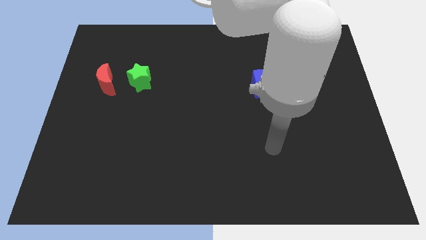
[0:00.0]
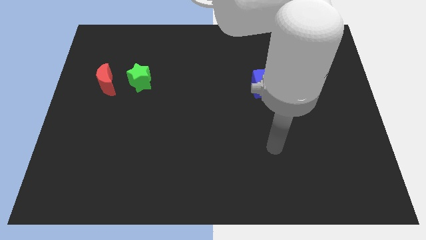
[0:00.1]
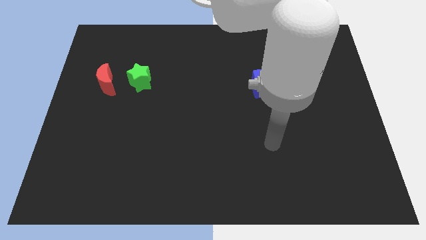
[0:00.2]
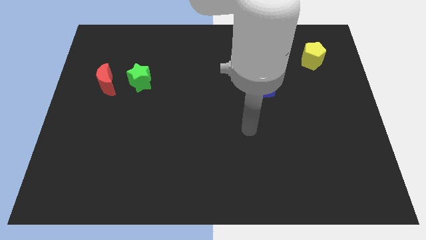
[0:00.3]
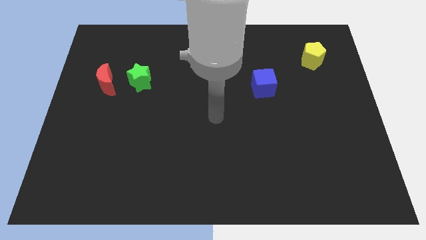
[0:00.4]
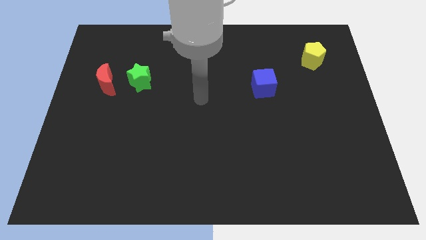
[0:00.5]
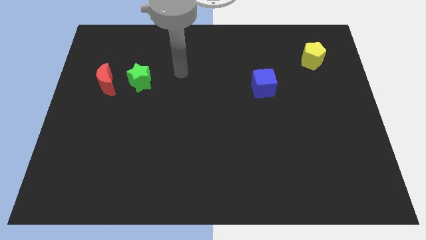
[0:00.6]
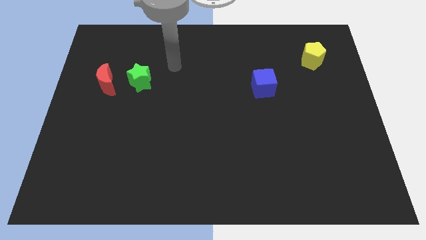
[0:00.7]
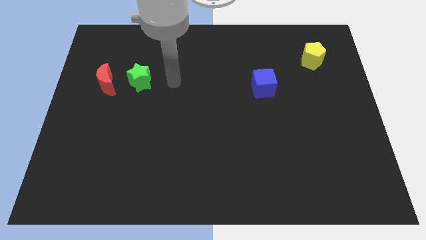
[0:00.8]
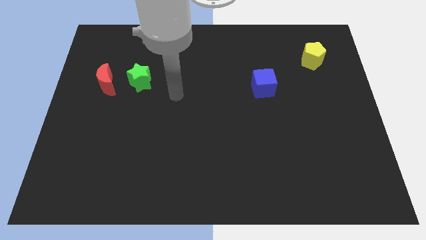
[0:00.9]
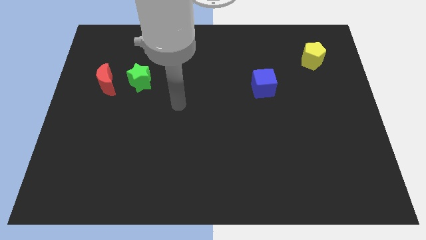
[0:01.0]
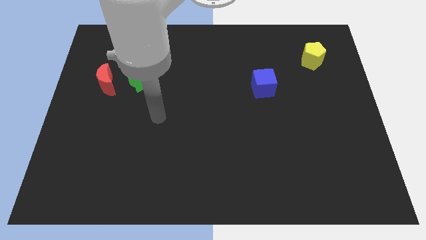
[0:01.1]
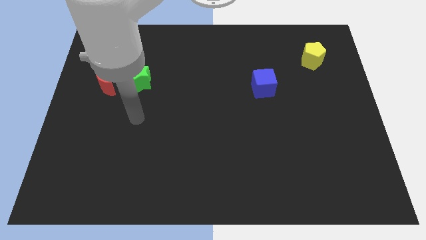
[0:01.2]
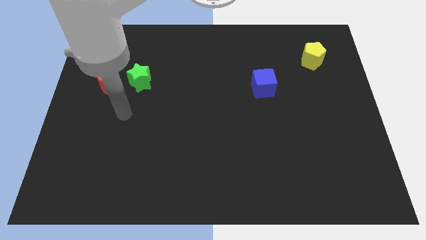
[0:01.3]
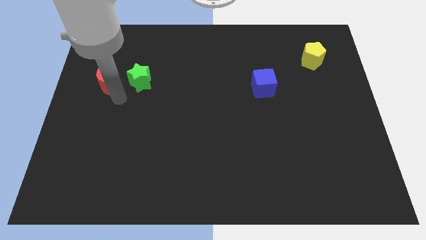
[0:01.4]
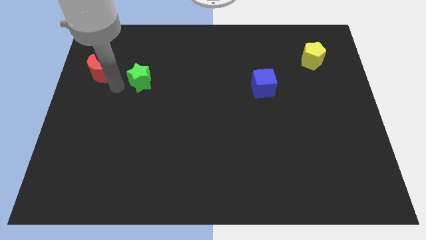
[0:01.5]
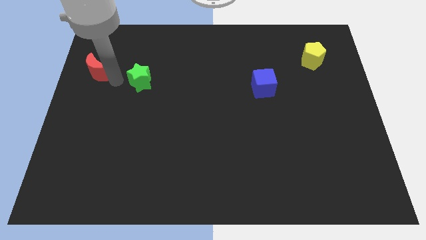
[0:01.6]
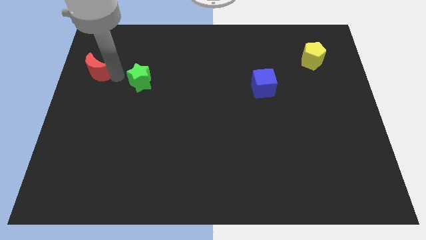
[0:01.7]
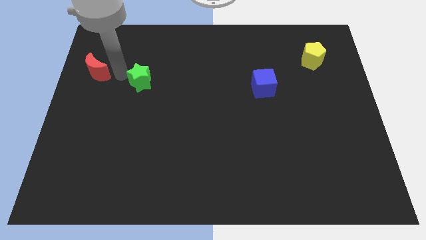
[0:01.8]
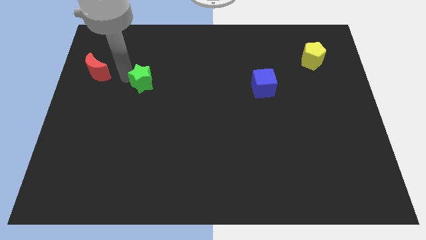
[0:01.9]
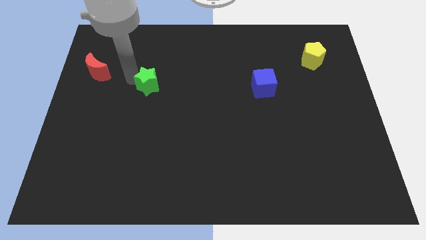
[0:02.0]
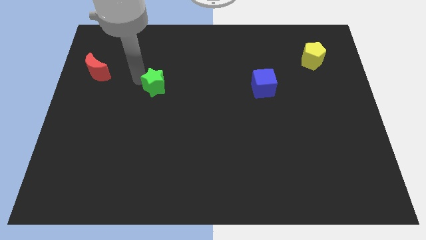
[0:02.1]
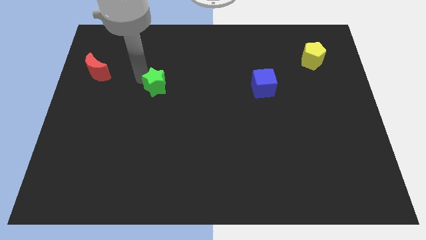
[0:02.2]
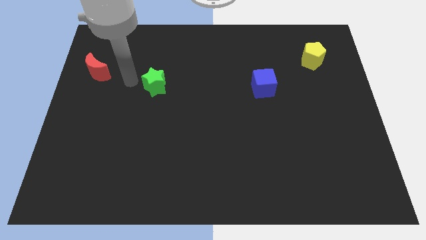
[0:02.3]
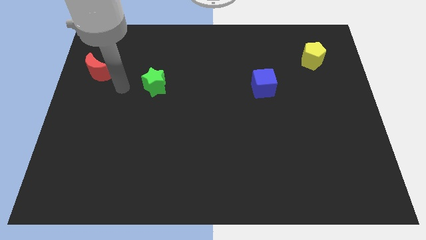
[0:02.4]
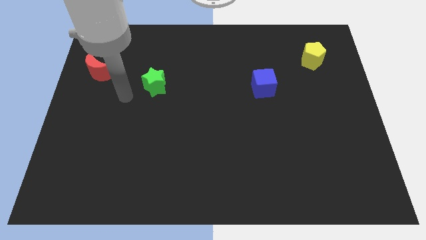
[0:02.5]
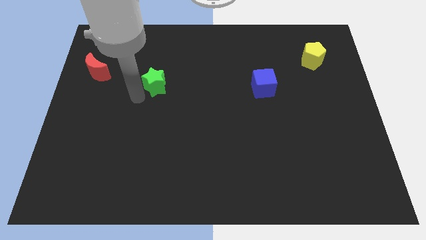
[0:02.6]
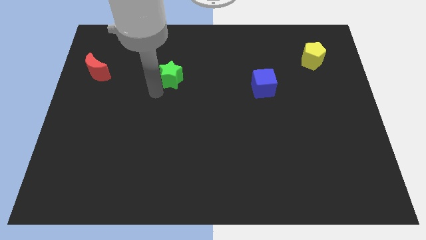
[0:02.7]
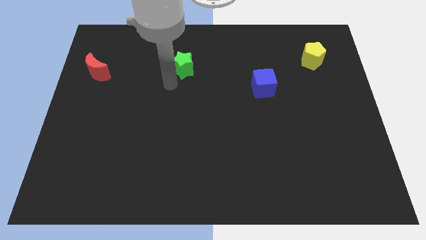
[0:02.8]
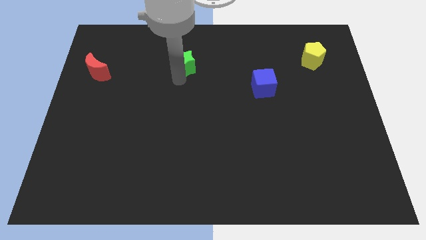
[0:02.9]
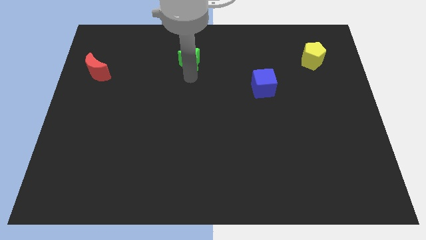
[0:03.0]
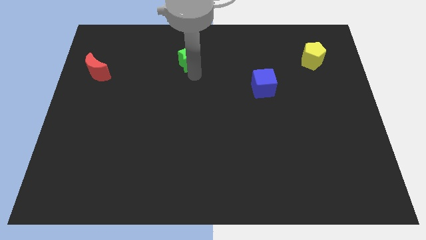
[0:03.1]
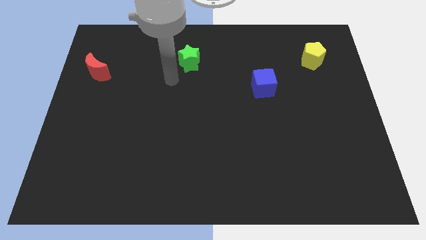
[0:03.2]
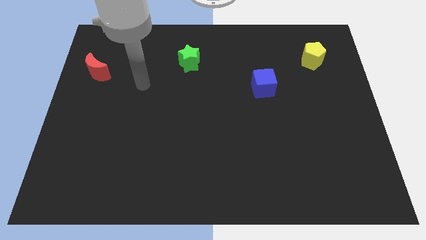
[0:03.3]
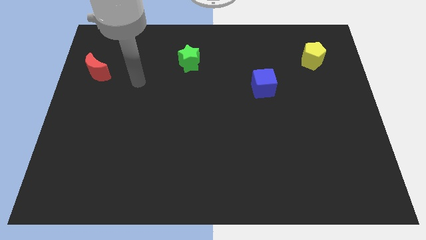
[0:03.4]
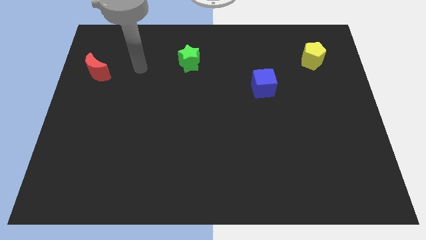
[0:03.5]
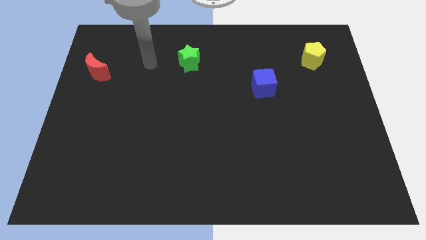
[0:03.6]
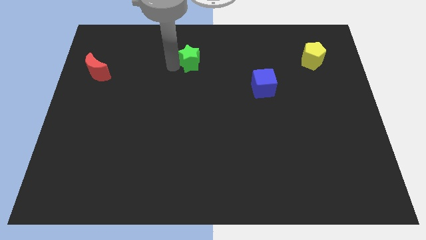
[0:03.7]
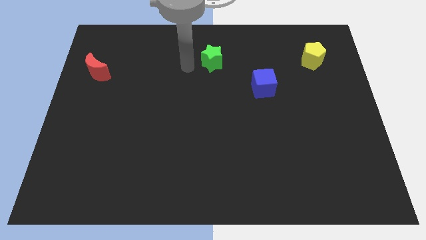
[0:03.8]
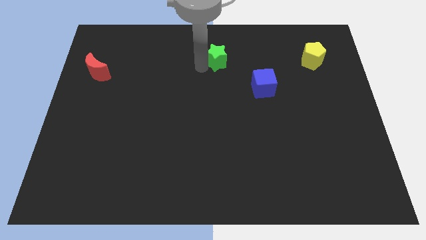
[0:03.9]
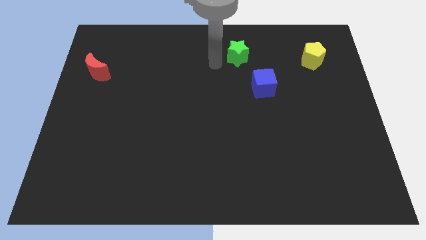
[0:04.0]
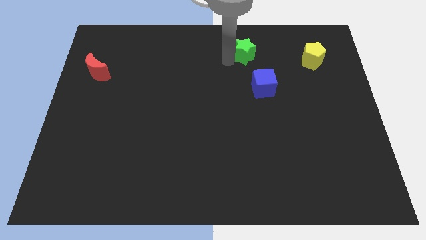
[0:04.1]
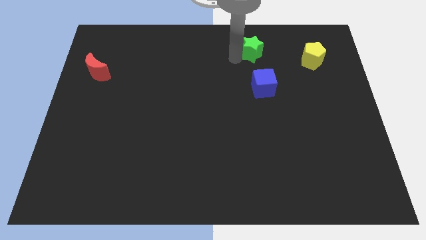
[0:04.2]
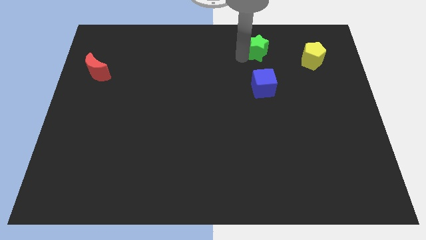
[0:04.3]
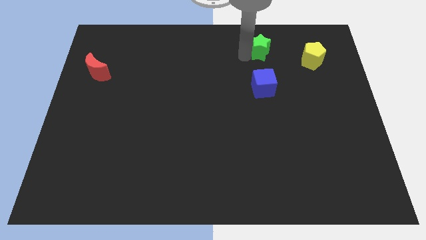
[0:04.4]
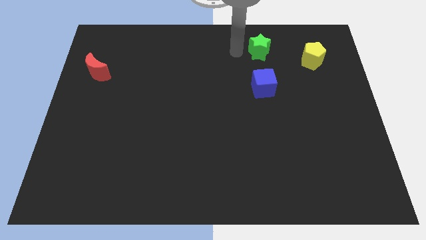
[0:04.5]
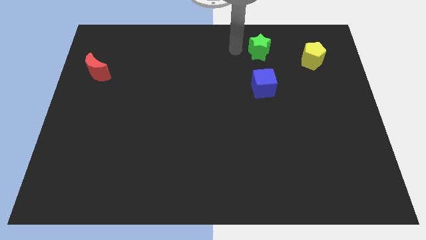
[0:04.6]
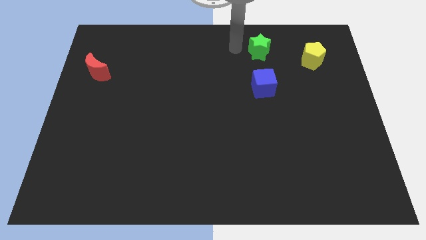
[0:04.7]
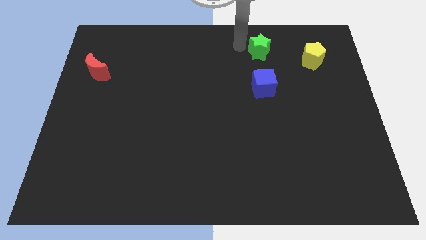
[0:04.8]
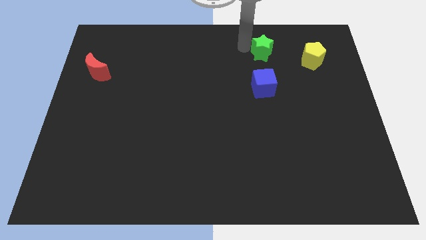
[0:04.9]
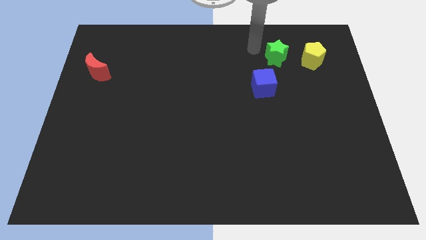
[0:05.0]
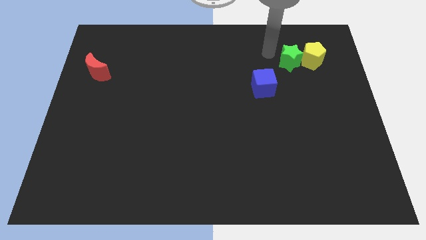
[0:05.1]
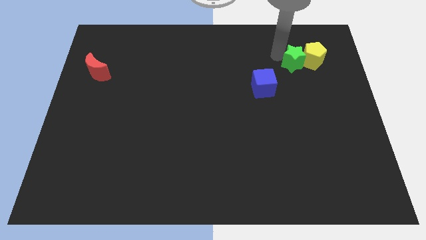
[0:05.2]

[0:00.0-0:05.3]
push the star towards the pentagon

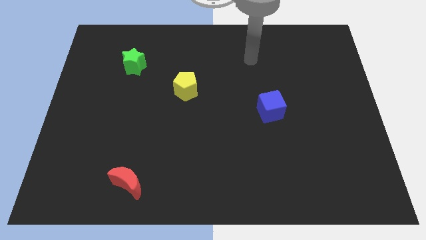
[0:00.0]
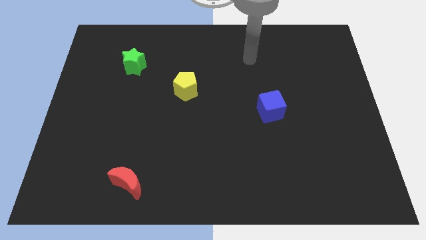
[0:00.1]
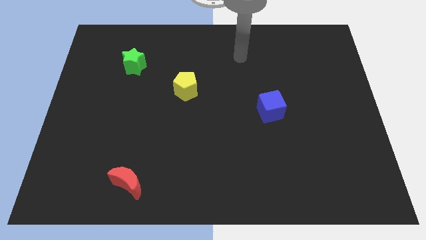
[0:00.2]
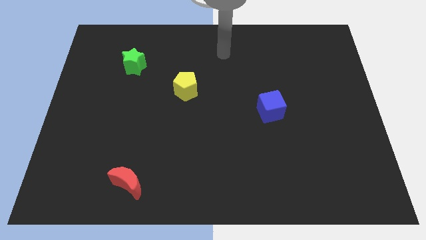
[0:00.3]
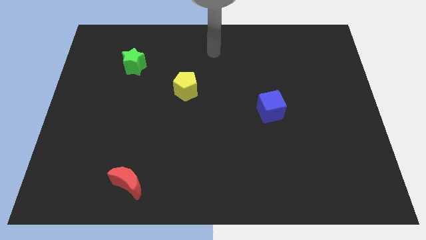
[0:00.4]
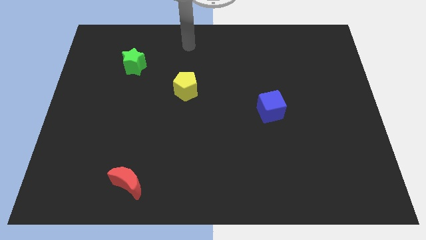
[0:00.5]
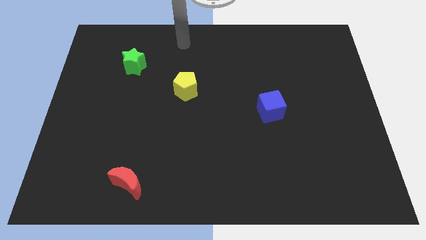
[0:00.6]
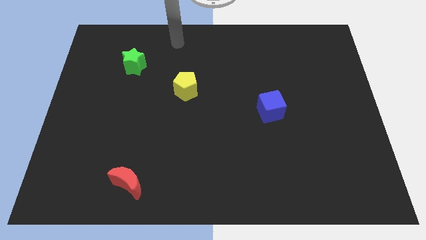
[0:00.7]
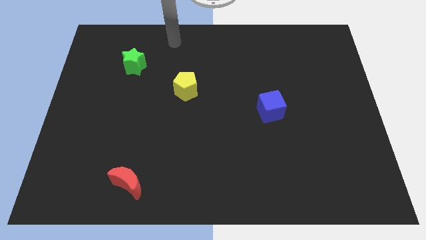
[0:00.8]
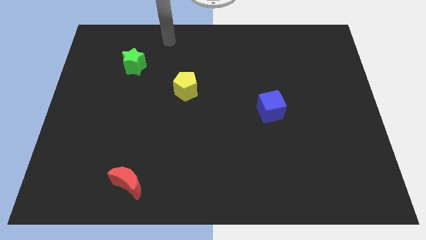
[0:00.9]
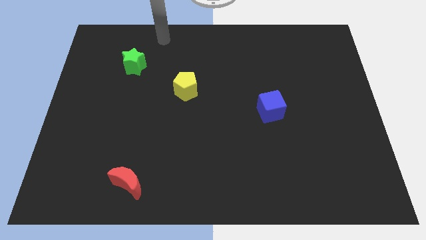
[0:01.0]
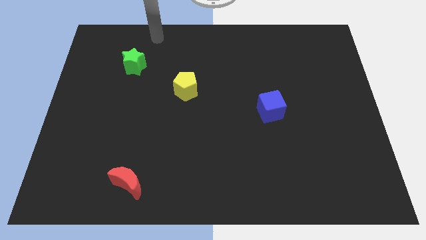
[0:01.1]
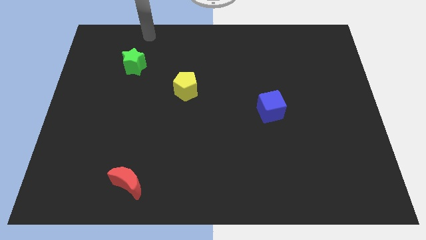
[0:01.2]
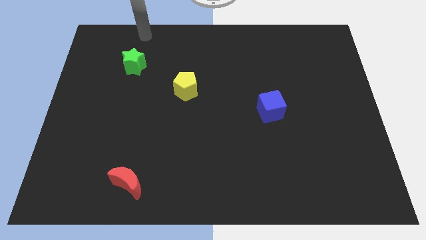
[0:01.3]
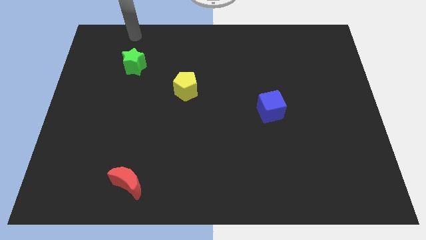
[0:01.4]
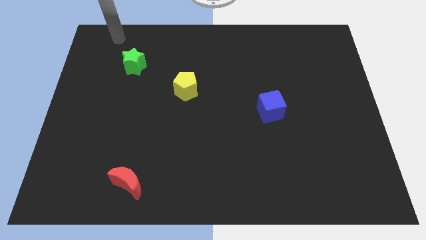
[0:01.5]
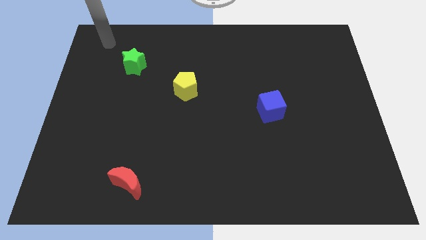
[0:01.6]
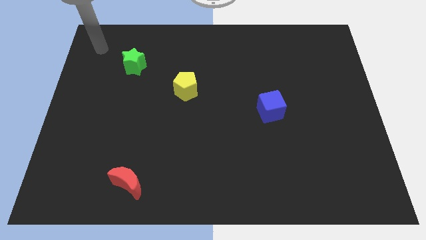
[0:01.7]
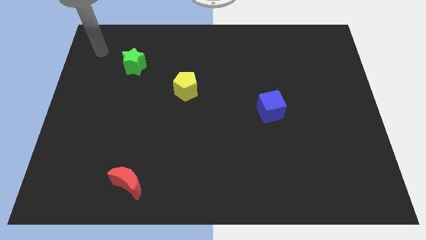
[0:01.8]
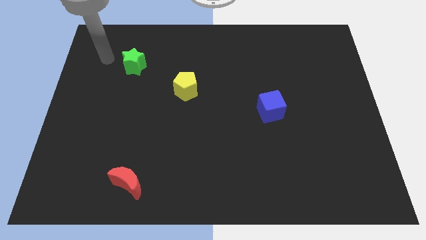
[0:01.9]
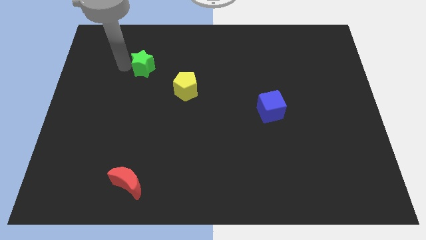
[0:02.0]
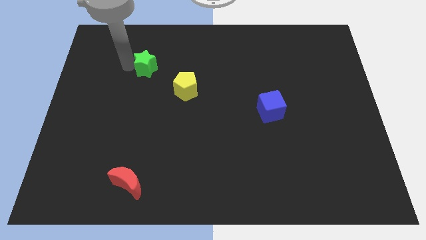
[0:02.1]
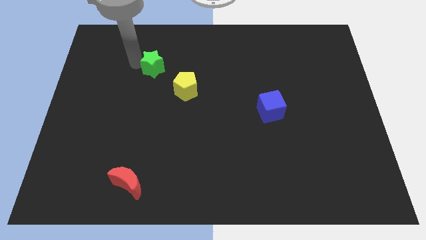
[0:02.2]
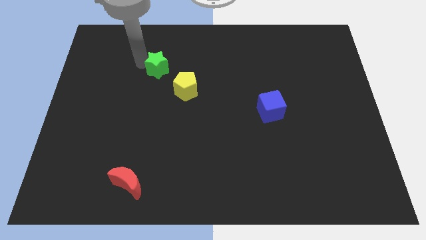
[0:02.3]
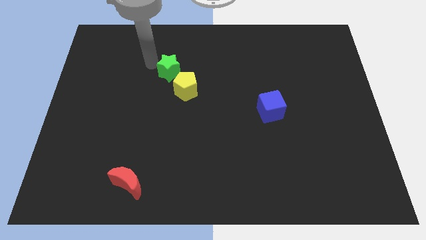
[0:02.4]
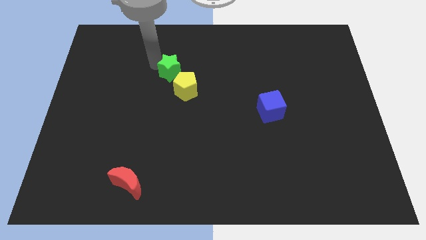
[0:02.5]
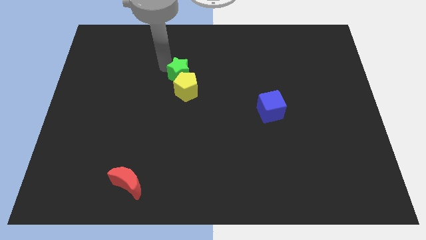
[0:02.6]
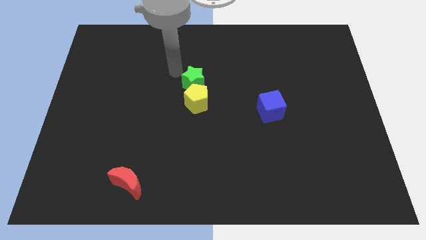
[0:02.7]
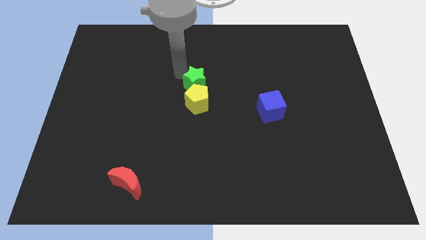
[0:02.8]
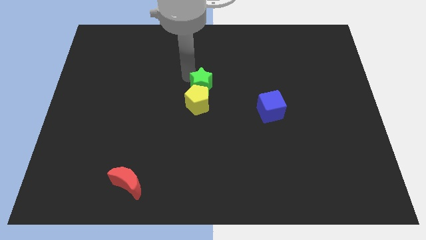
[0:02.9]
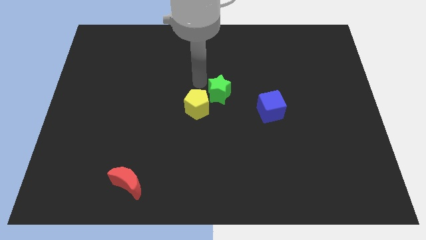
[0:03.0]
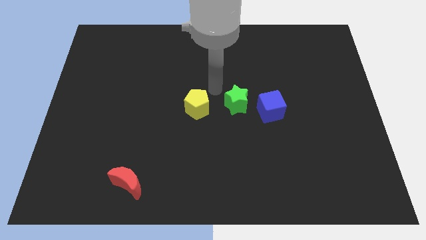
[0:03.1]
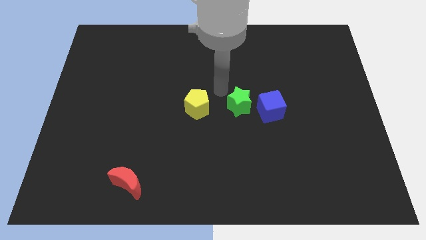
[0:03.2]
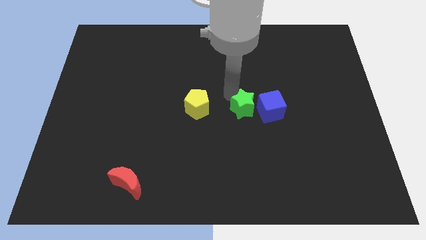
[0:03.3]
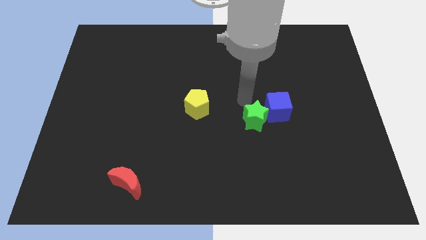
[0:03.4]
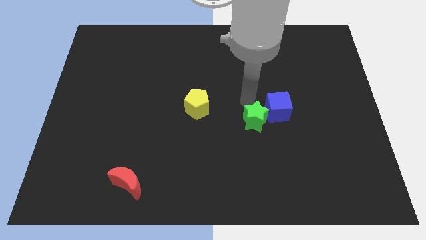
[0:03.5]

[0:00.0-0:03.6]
move the green star to the blue block
